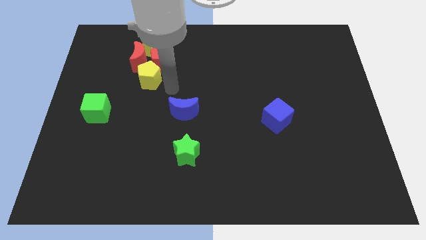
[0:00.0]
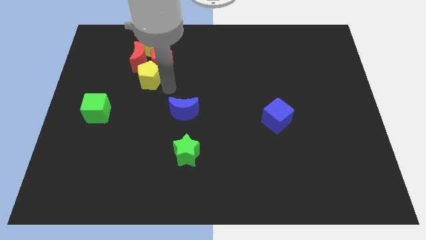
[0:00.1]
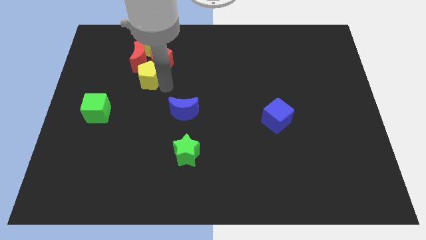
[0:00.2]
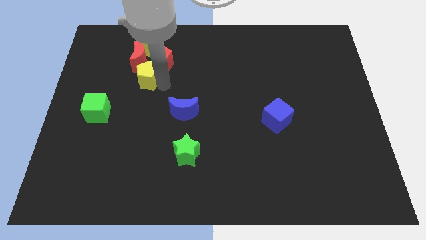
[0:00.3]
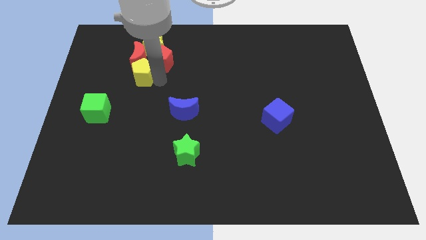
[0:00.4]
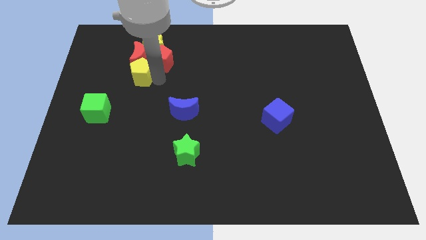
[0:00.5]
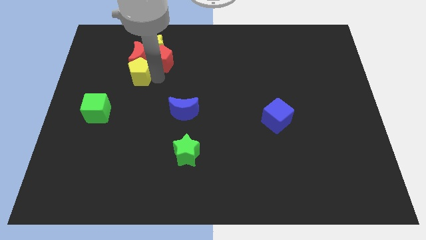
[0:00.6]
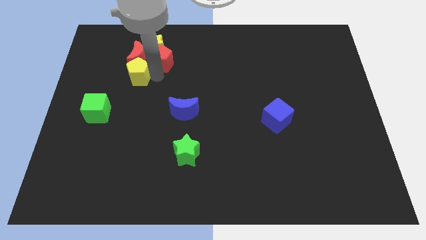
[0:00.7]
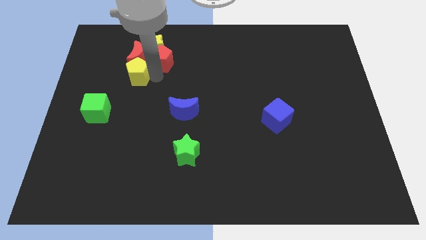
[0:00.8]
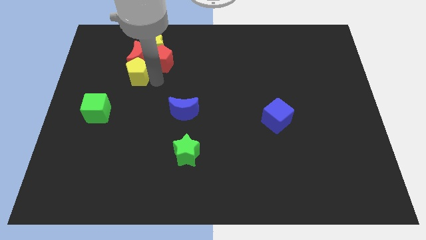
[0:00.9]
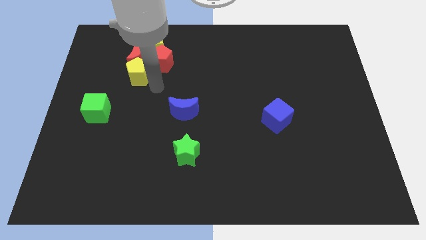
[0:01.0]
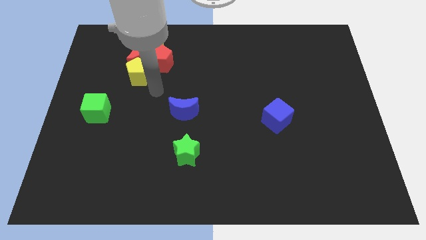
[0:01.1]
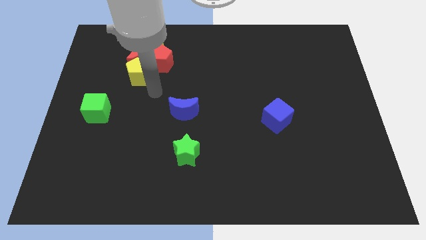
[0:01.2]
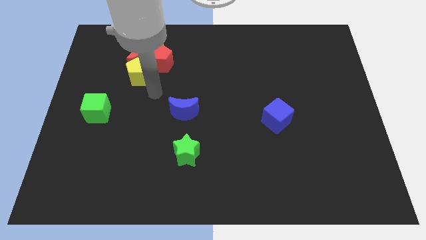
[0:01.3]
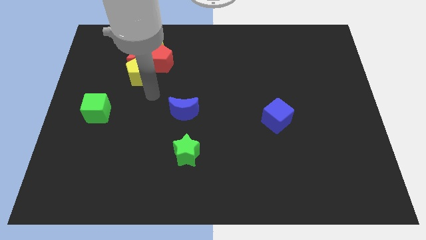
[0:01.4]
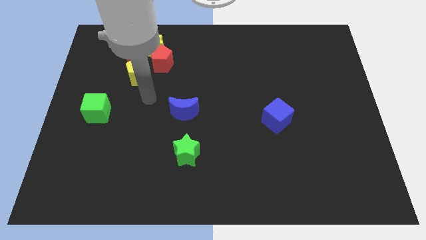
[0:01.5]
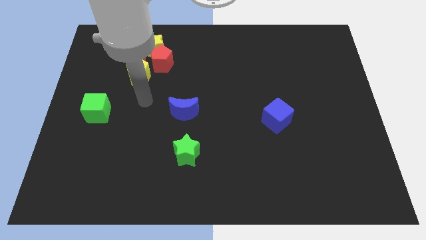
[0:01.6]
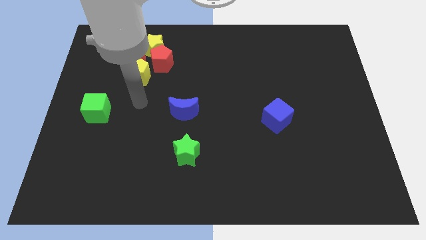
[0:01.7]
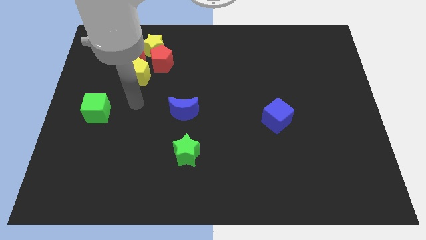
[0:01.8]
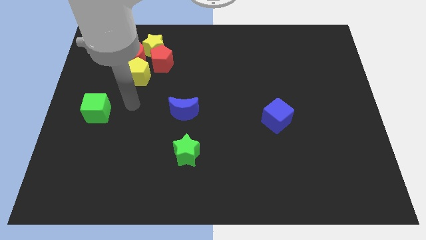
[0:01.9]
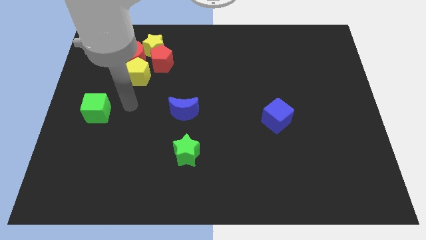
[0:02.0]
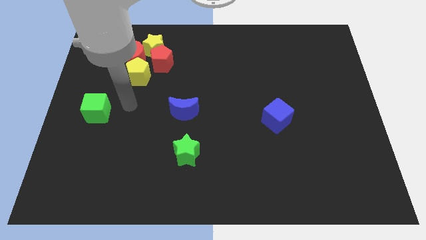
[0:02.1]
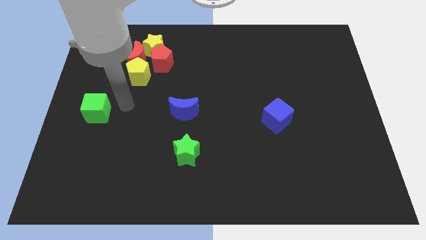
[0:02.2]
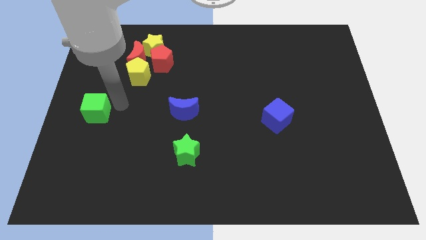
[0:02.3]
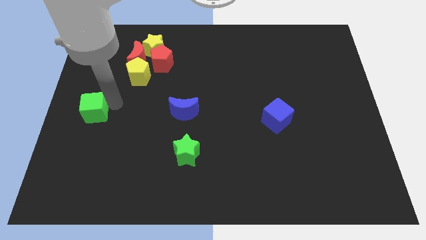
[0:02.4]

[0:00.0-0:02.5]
place the yellow pentagon into group of blocks

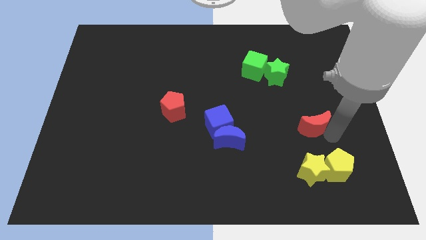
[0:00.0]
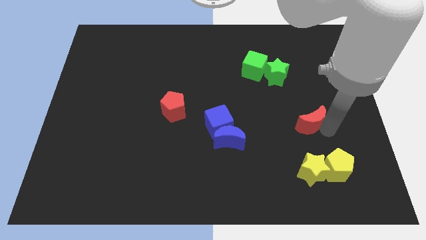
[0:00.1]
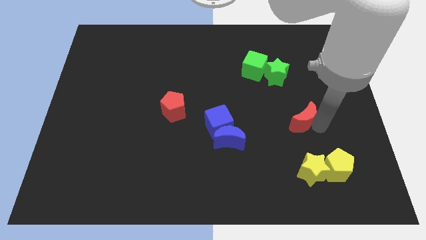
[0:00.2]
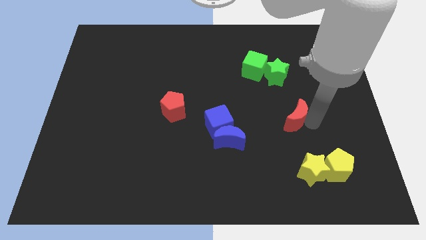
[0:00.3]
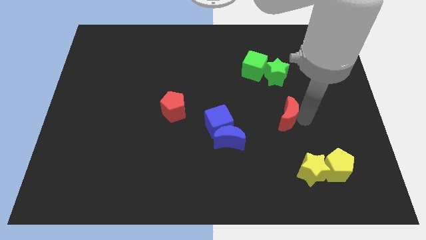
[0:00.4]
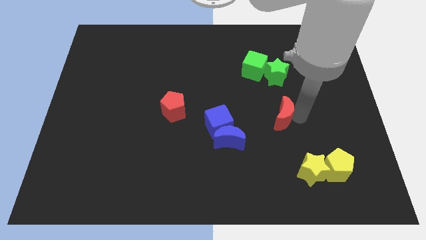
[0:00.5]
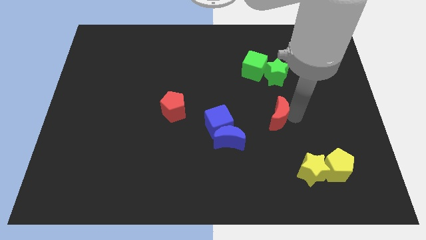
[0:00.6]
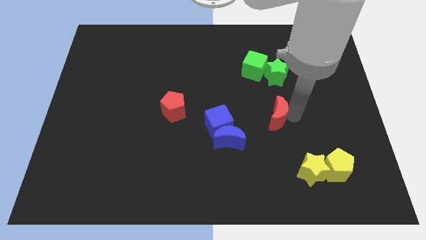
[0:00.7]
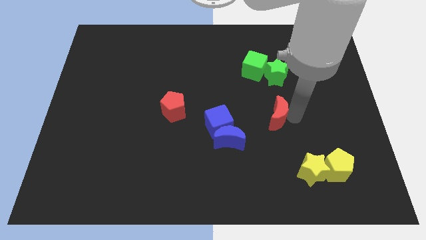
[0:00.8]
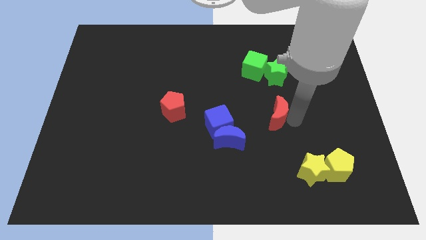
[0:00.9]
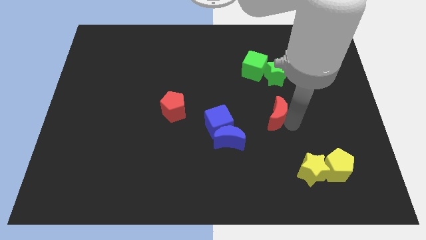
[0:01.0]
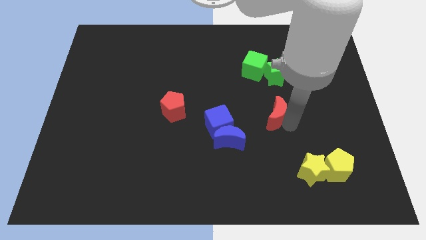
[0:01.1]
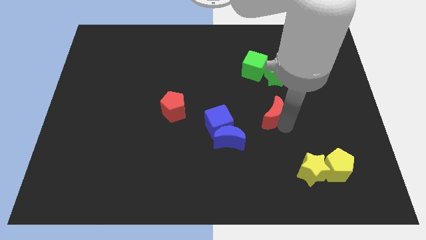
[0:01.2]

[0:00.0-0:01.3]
put the red crescent below the green star

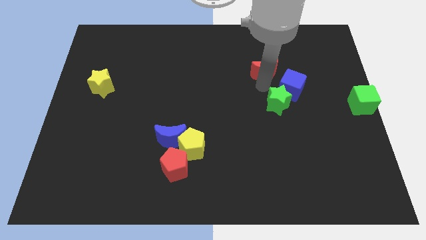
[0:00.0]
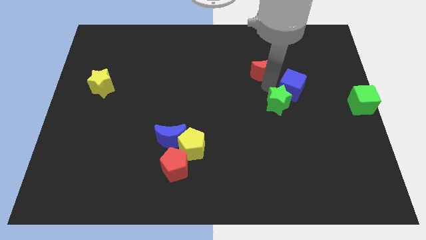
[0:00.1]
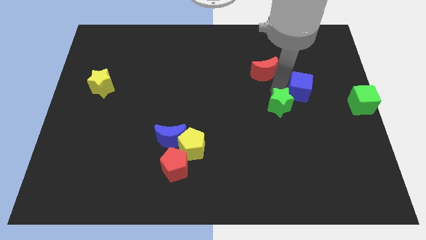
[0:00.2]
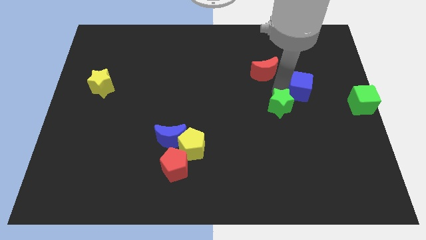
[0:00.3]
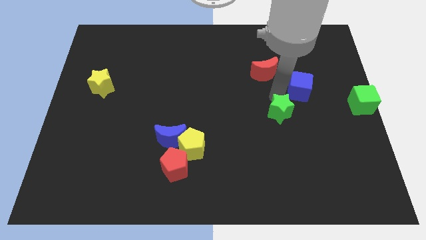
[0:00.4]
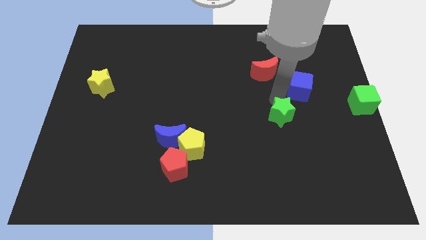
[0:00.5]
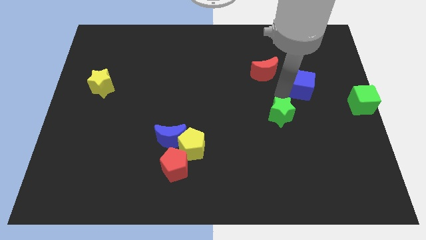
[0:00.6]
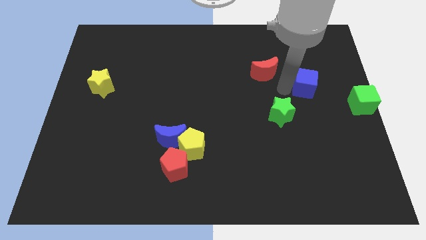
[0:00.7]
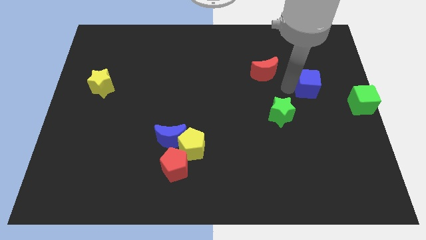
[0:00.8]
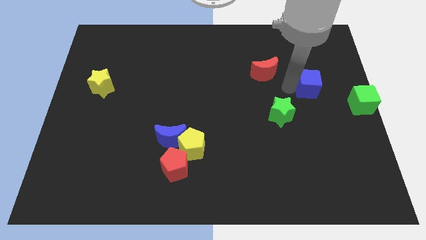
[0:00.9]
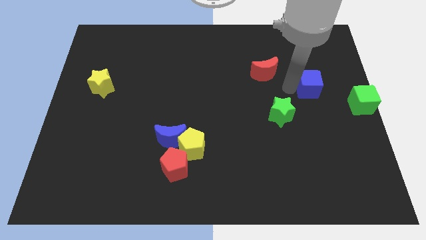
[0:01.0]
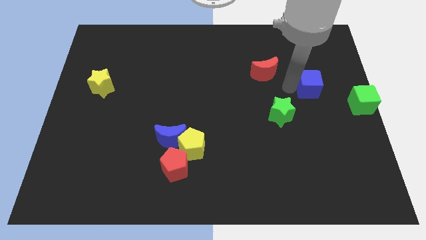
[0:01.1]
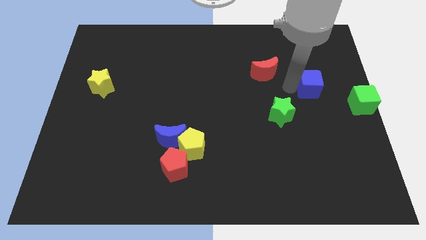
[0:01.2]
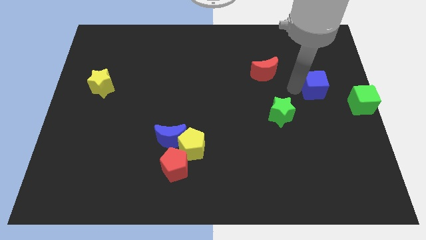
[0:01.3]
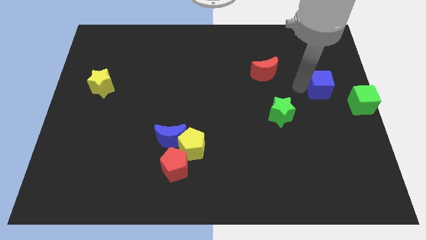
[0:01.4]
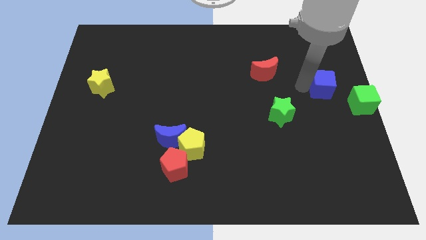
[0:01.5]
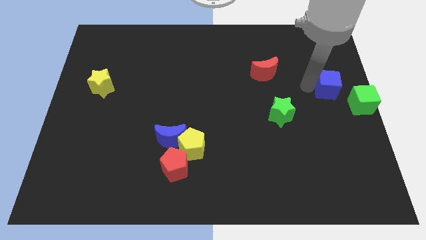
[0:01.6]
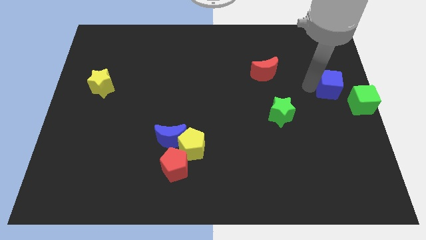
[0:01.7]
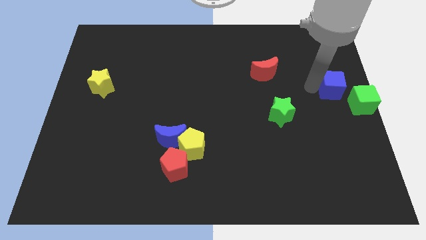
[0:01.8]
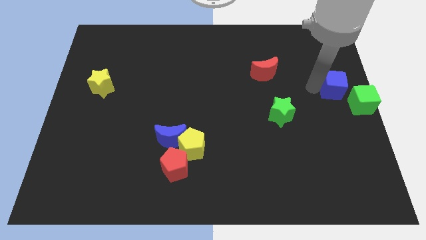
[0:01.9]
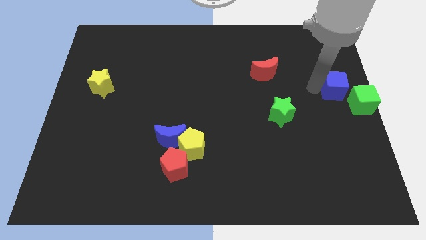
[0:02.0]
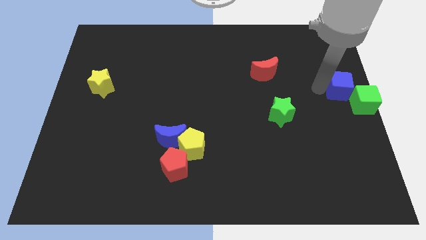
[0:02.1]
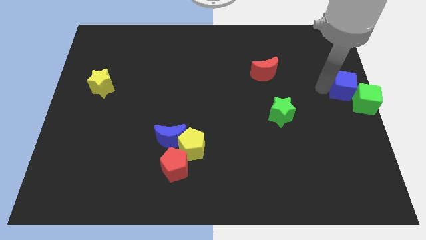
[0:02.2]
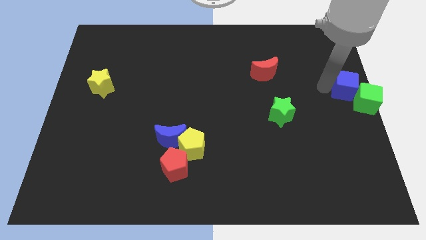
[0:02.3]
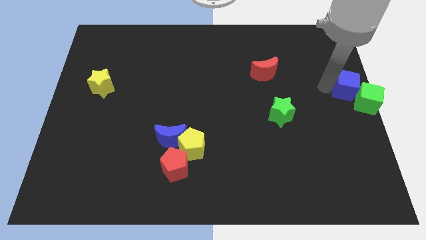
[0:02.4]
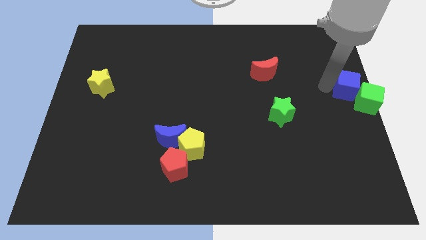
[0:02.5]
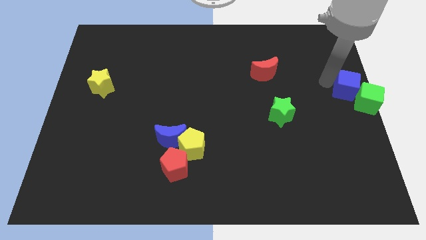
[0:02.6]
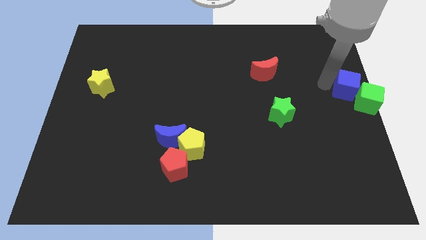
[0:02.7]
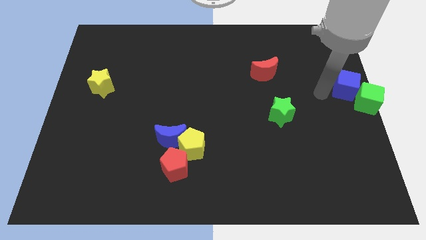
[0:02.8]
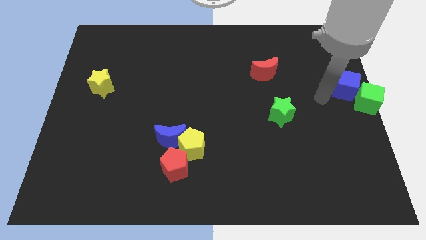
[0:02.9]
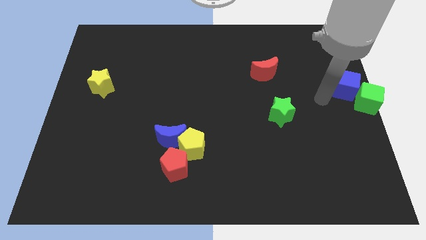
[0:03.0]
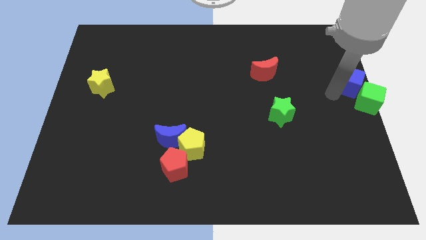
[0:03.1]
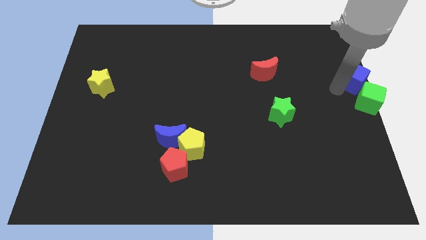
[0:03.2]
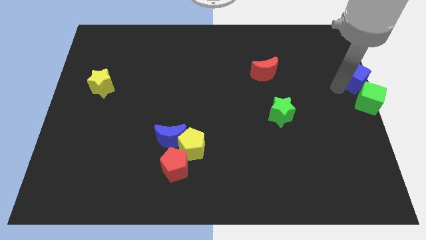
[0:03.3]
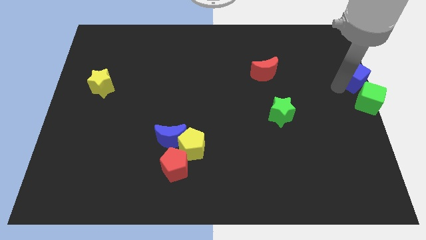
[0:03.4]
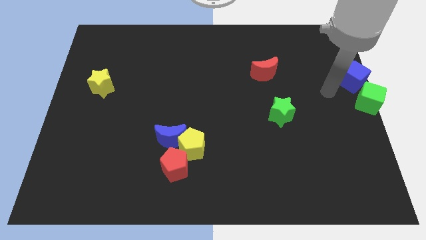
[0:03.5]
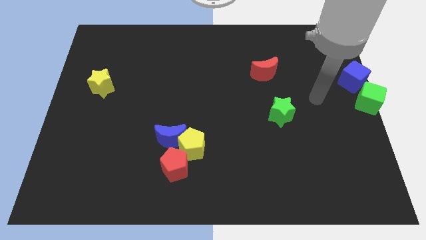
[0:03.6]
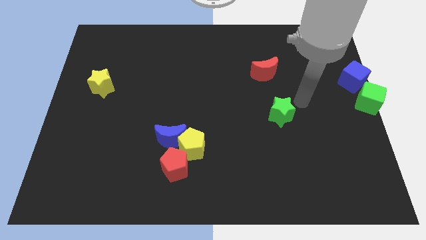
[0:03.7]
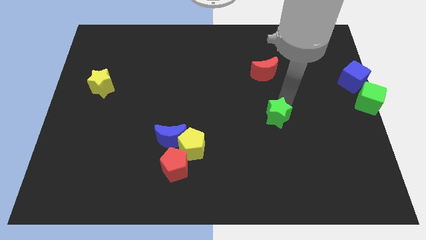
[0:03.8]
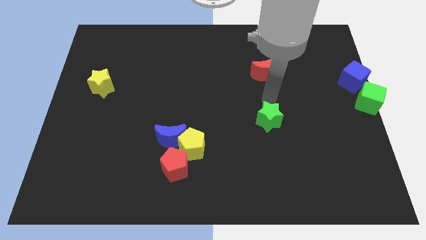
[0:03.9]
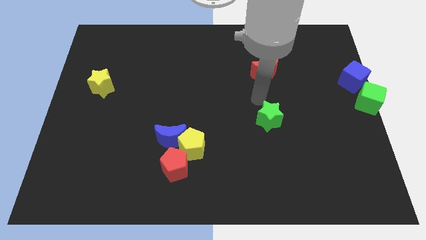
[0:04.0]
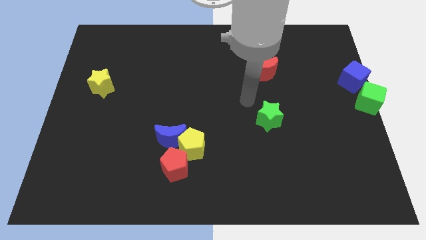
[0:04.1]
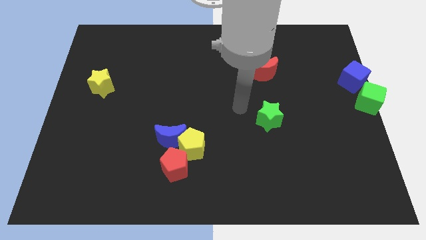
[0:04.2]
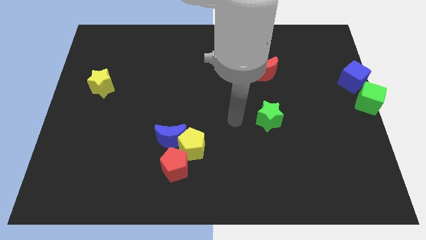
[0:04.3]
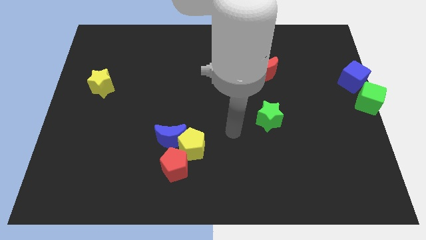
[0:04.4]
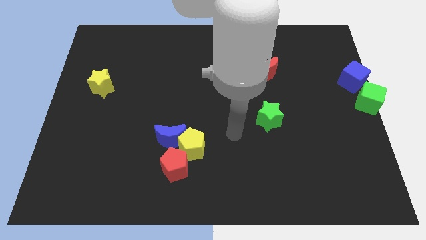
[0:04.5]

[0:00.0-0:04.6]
push the blue cube into the green cube

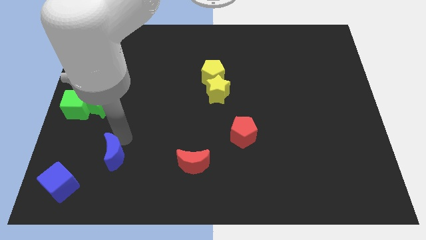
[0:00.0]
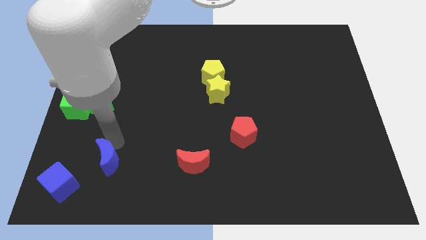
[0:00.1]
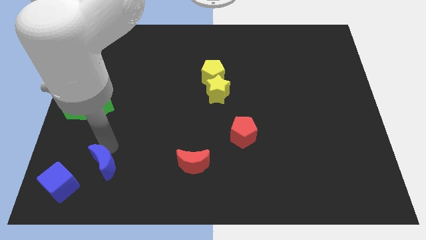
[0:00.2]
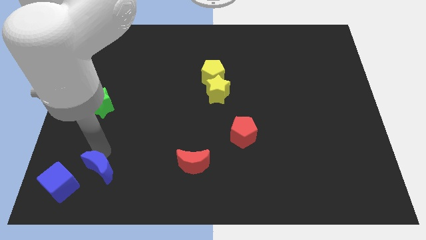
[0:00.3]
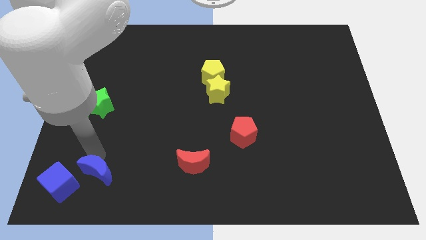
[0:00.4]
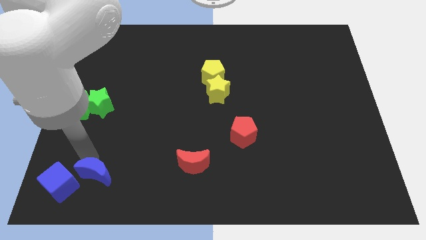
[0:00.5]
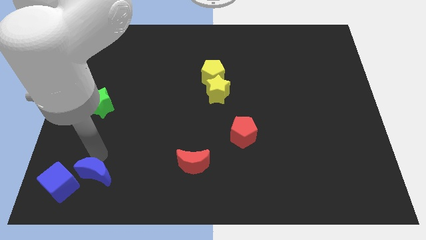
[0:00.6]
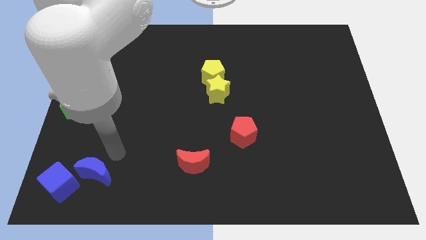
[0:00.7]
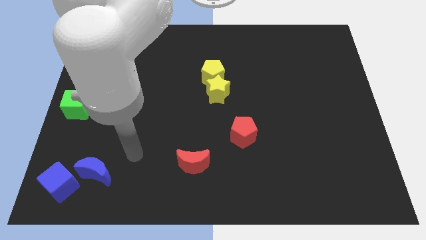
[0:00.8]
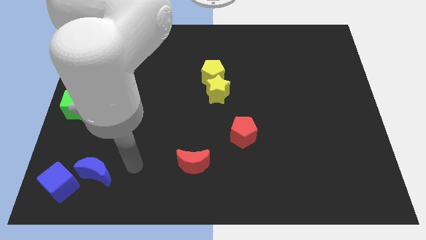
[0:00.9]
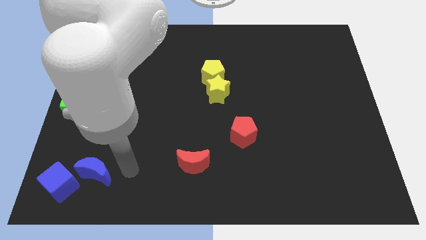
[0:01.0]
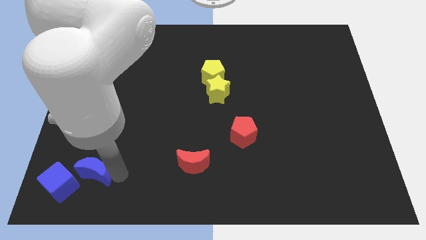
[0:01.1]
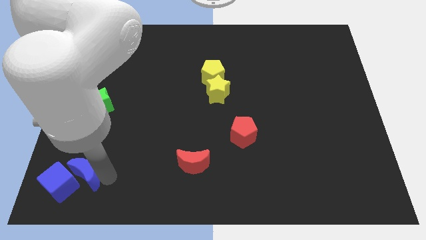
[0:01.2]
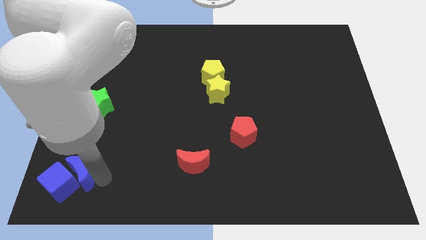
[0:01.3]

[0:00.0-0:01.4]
slide blue moon into blue cube
